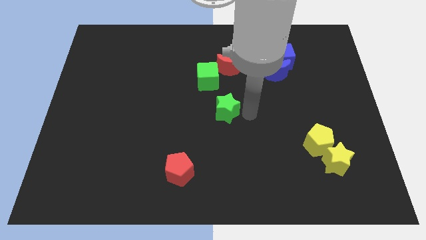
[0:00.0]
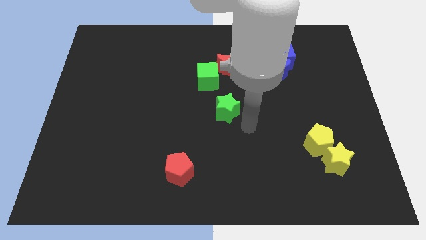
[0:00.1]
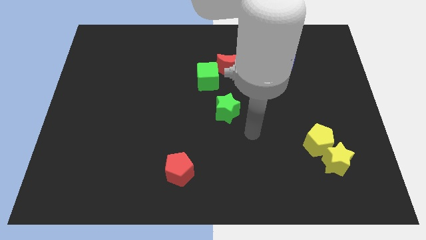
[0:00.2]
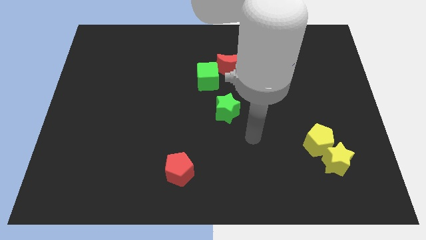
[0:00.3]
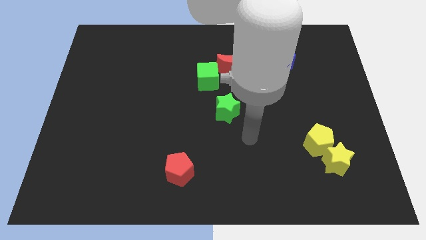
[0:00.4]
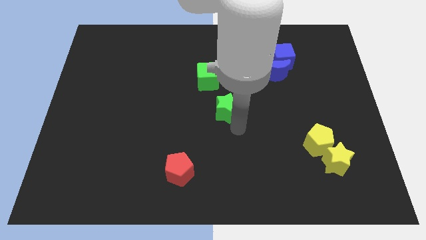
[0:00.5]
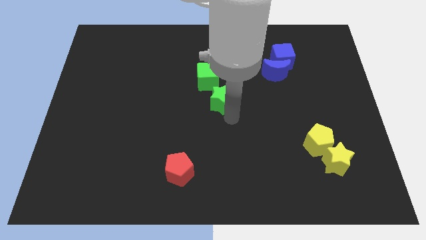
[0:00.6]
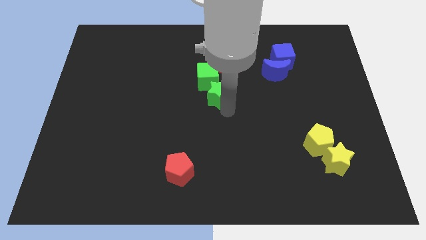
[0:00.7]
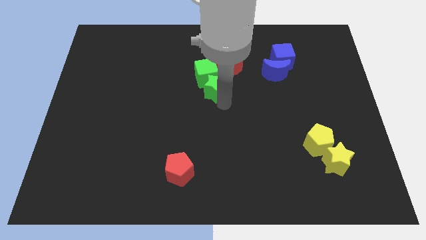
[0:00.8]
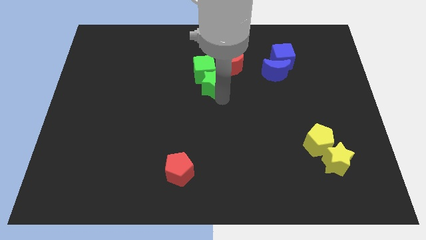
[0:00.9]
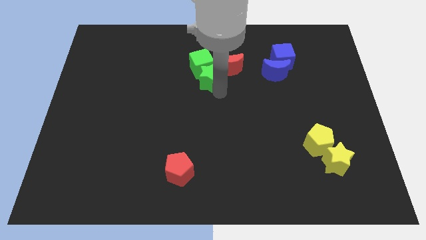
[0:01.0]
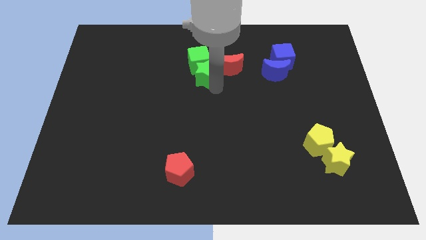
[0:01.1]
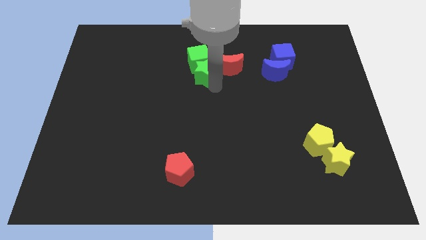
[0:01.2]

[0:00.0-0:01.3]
place the green star below the green cube

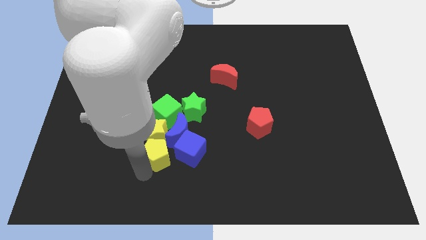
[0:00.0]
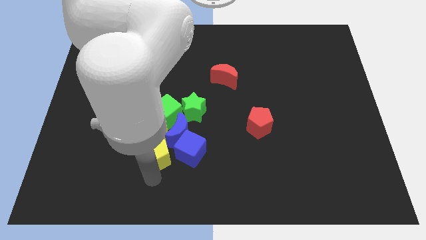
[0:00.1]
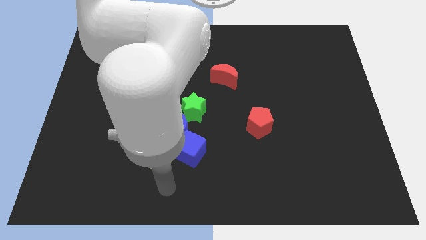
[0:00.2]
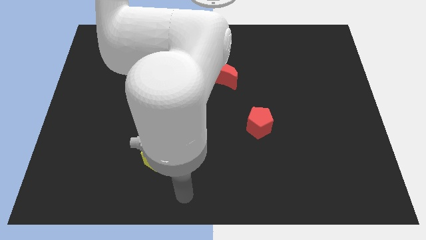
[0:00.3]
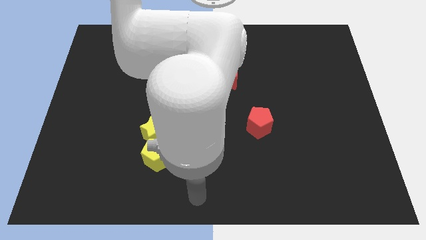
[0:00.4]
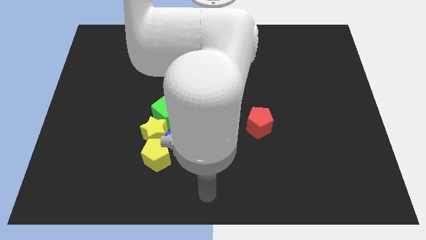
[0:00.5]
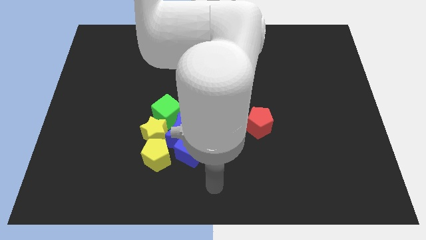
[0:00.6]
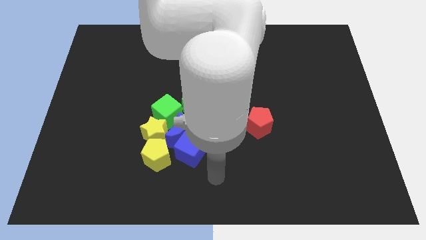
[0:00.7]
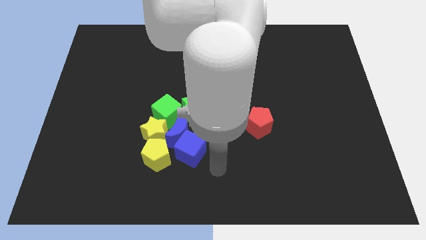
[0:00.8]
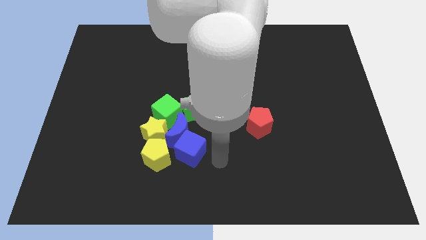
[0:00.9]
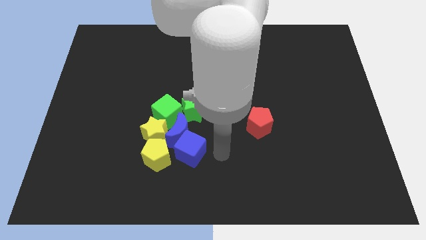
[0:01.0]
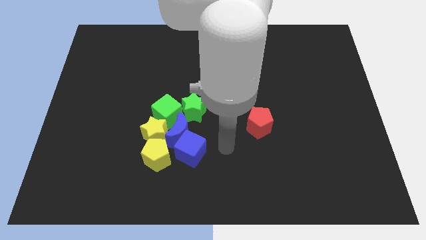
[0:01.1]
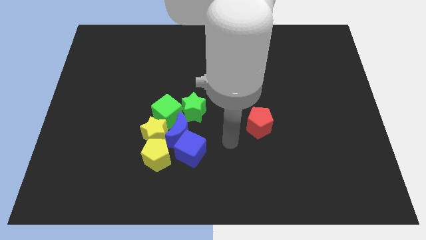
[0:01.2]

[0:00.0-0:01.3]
move the arm right to the blue cube

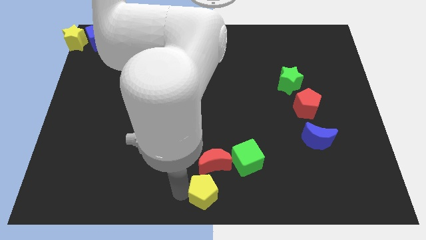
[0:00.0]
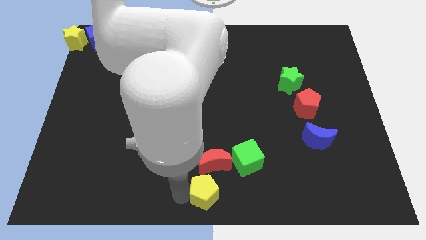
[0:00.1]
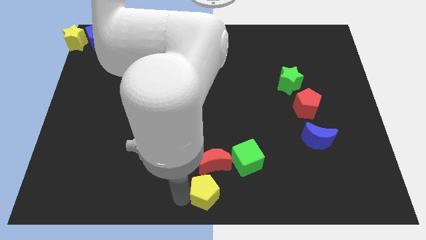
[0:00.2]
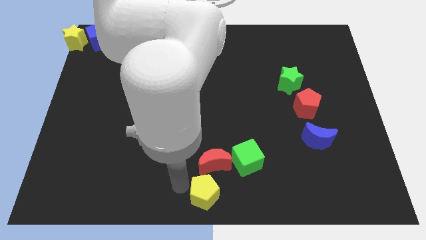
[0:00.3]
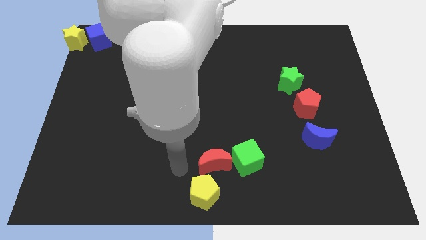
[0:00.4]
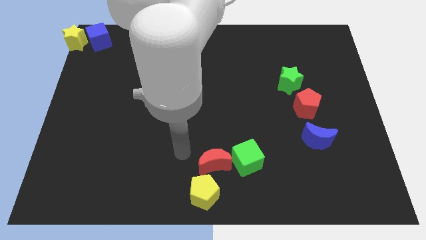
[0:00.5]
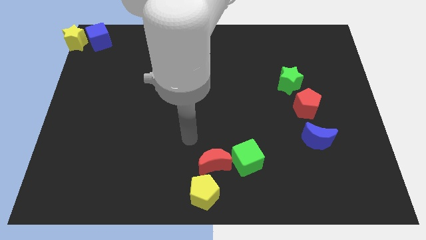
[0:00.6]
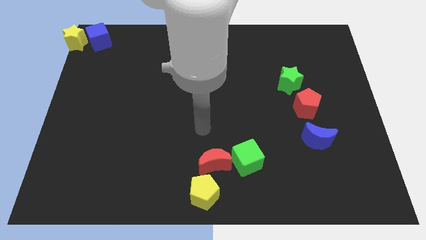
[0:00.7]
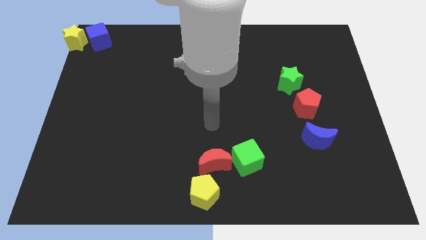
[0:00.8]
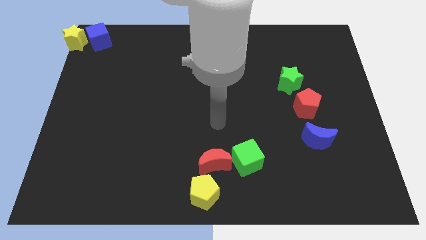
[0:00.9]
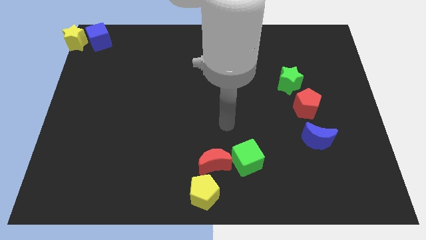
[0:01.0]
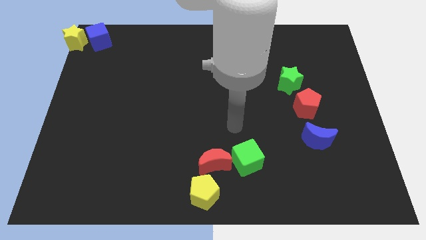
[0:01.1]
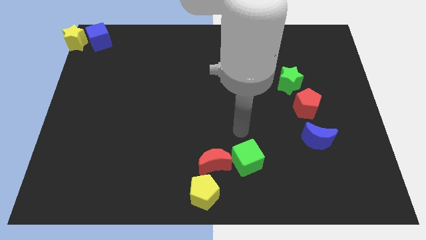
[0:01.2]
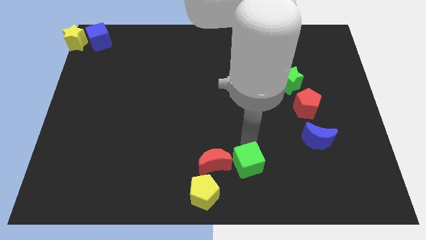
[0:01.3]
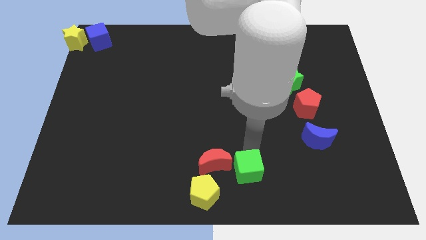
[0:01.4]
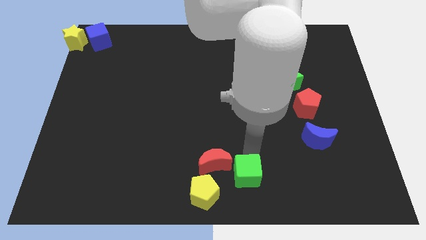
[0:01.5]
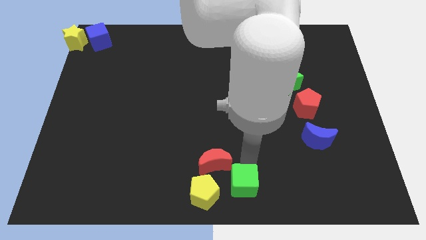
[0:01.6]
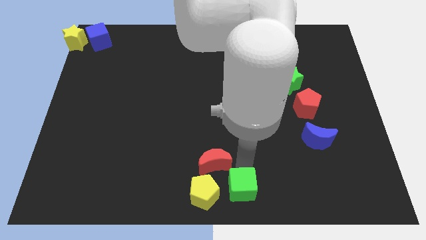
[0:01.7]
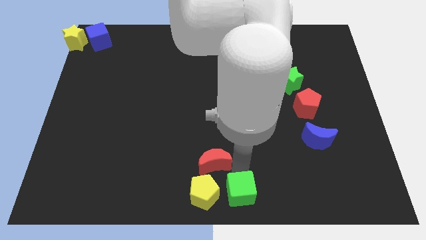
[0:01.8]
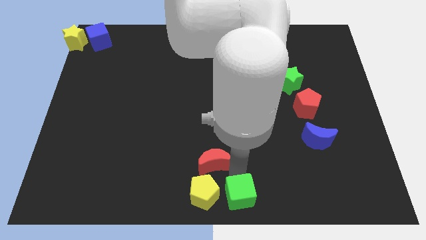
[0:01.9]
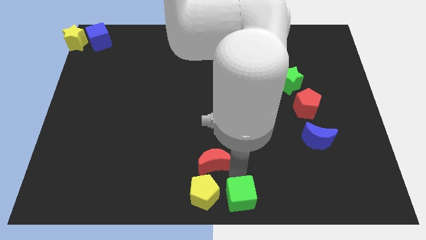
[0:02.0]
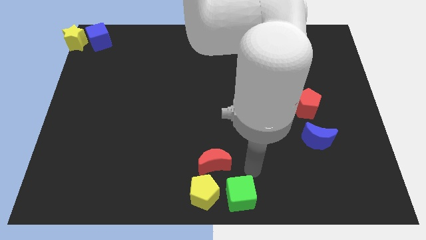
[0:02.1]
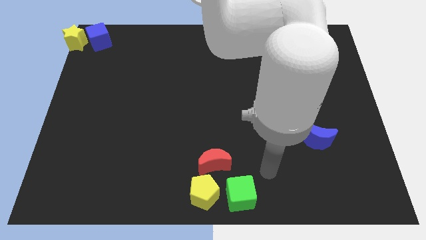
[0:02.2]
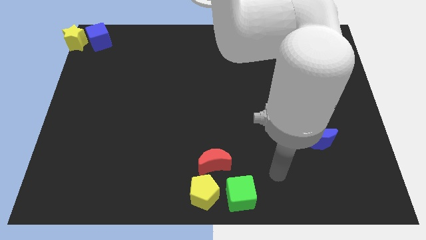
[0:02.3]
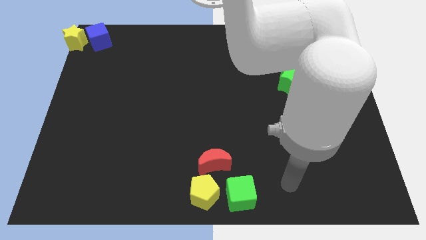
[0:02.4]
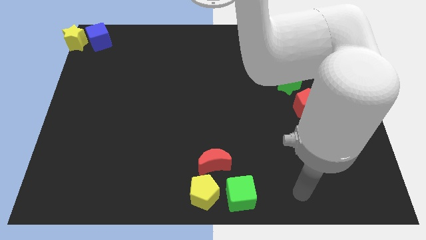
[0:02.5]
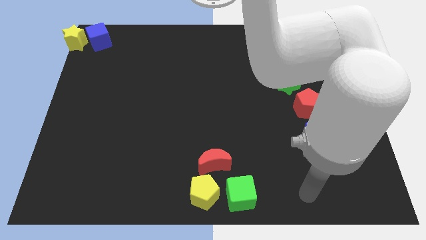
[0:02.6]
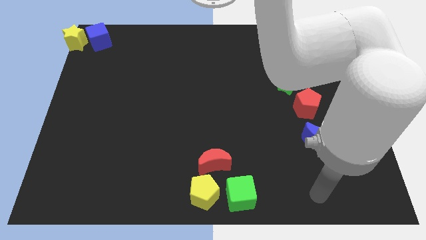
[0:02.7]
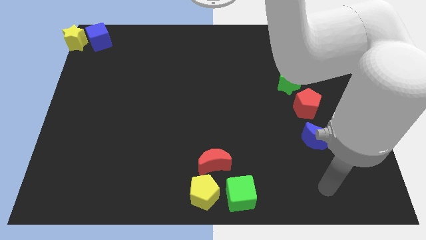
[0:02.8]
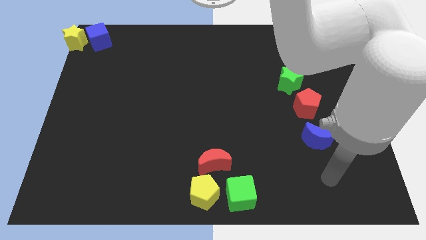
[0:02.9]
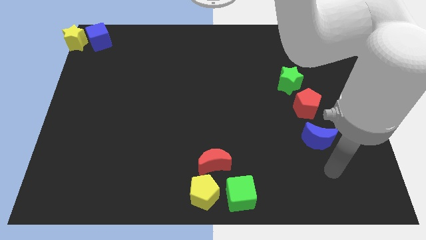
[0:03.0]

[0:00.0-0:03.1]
place the green cube to the right of the yellow pentagon

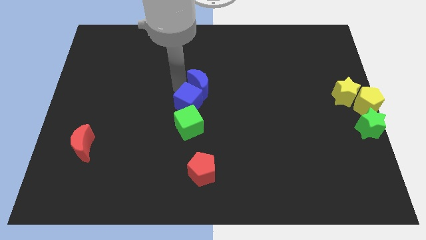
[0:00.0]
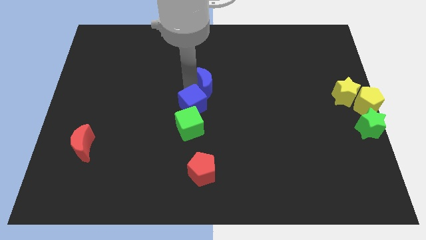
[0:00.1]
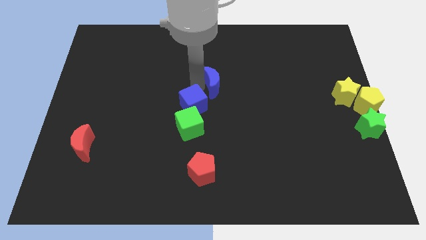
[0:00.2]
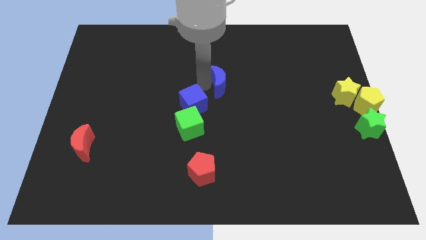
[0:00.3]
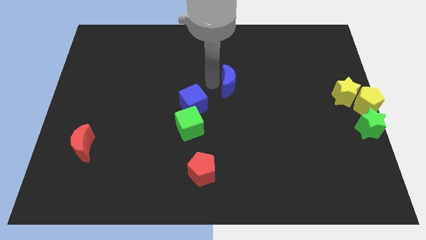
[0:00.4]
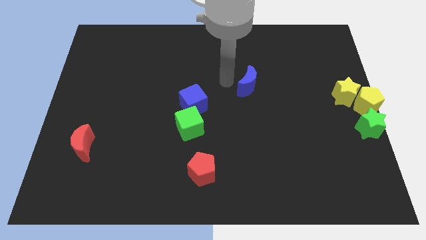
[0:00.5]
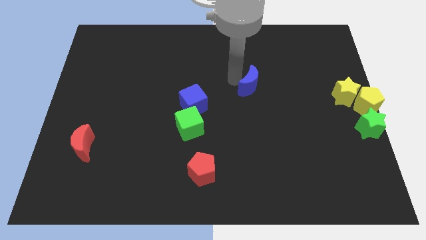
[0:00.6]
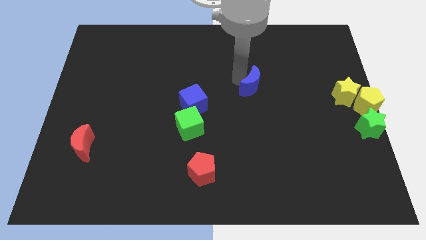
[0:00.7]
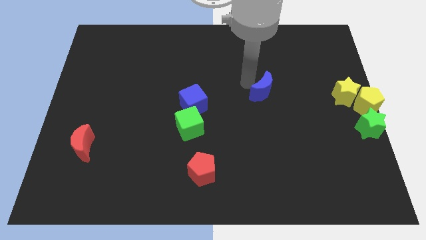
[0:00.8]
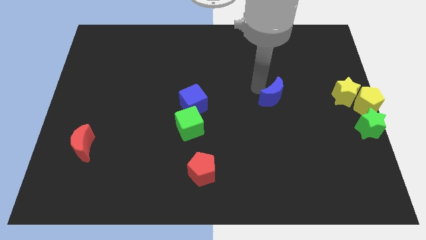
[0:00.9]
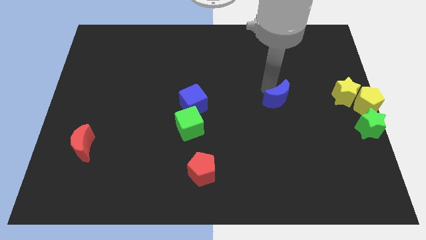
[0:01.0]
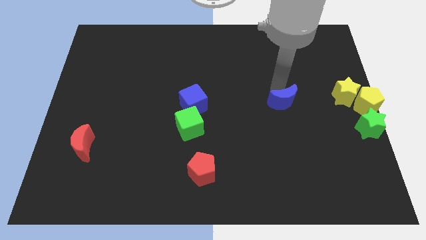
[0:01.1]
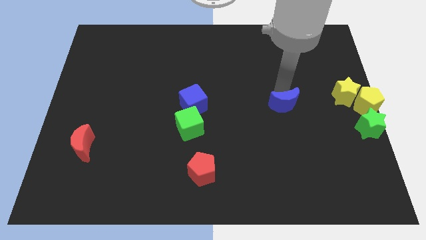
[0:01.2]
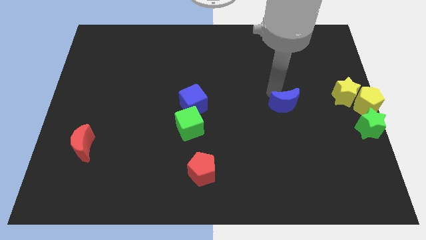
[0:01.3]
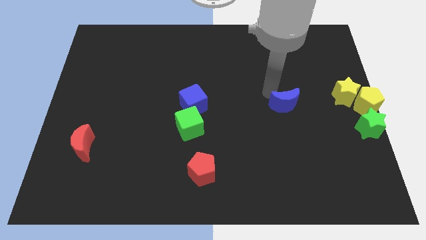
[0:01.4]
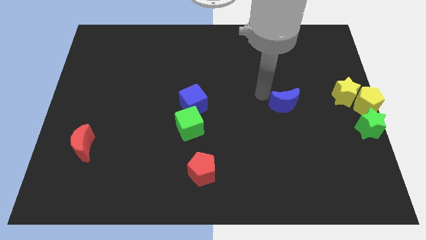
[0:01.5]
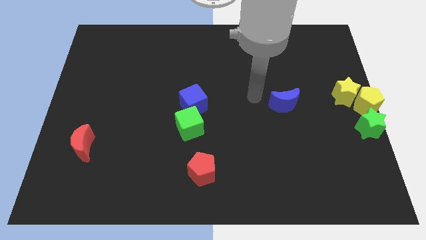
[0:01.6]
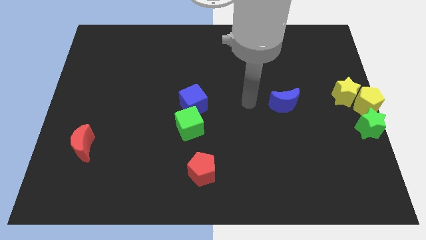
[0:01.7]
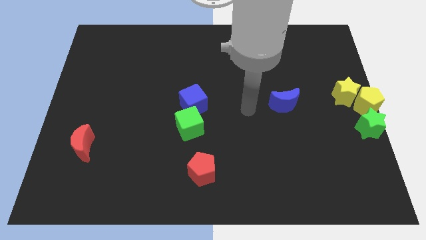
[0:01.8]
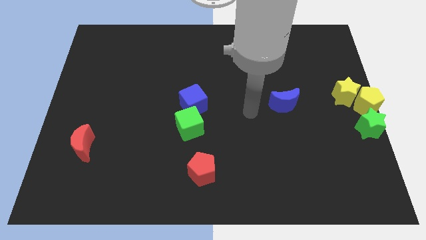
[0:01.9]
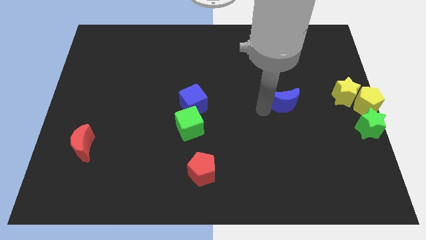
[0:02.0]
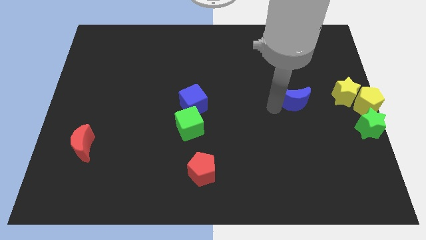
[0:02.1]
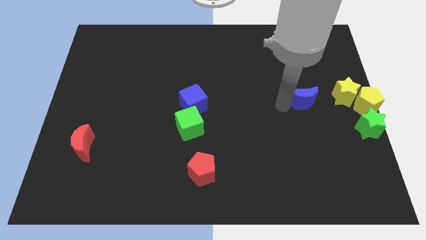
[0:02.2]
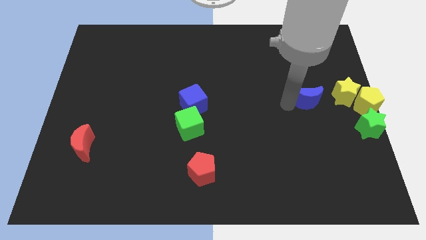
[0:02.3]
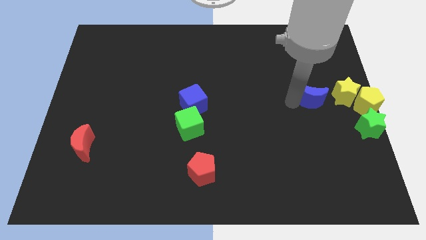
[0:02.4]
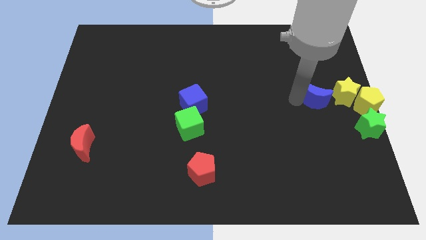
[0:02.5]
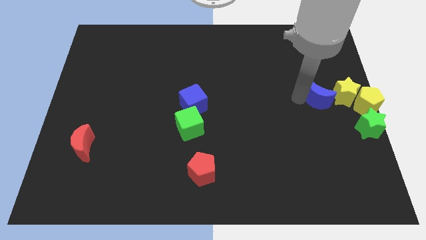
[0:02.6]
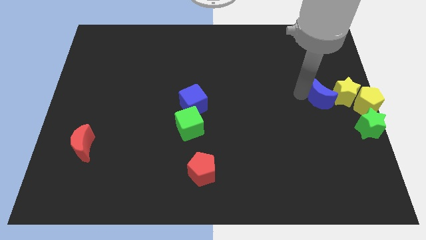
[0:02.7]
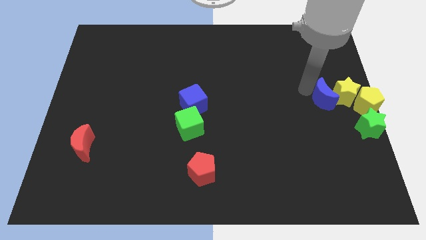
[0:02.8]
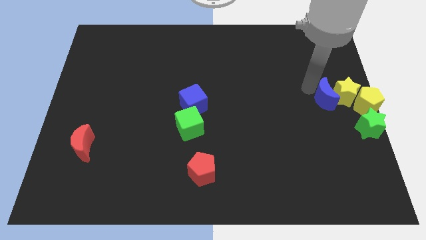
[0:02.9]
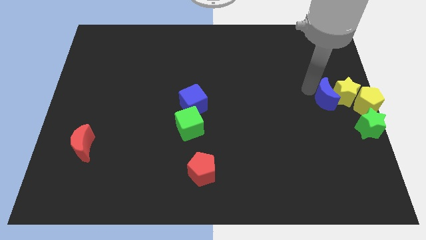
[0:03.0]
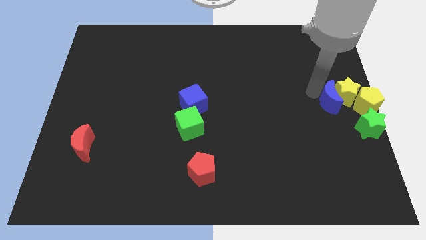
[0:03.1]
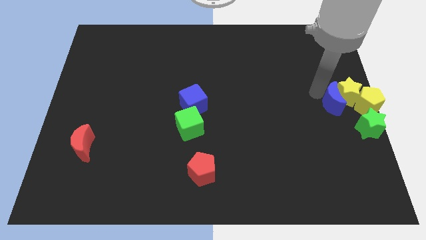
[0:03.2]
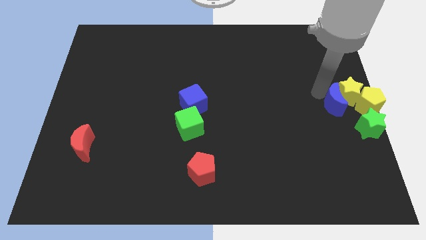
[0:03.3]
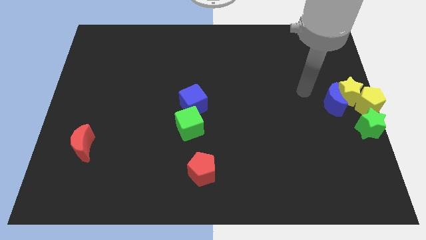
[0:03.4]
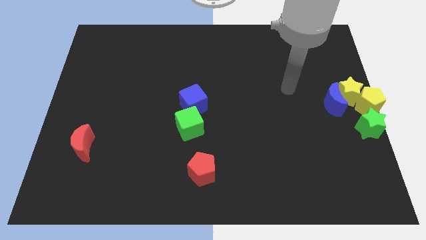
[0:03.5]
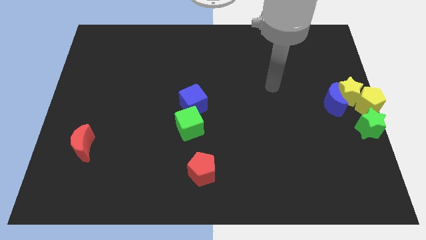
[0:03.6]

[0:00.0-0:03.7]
separate the blue crescent from the blue cube
